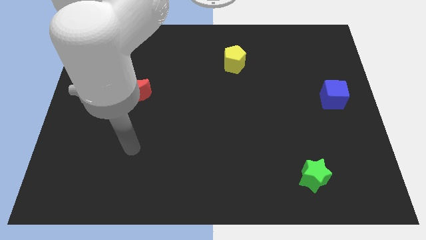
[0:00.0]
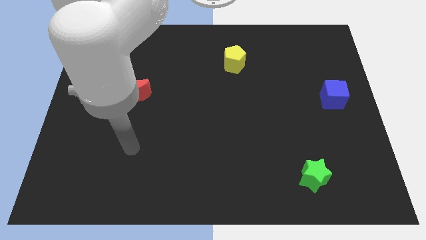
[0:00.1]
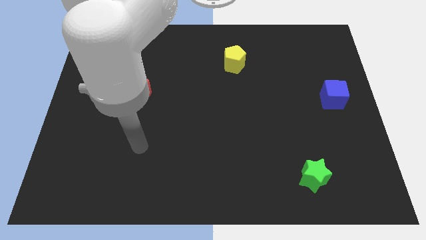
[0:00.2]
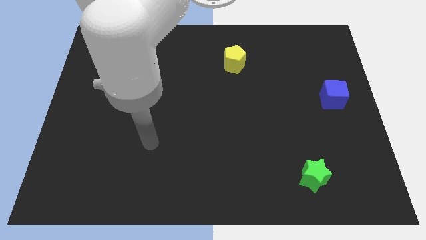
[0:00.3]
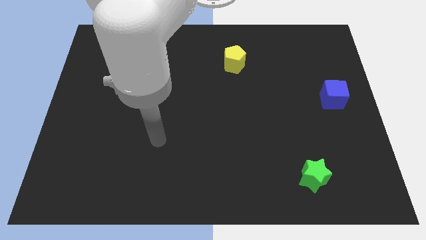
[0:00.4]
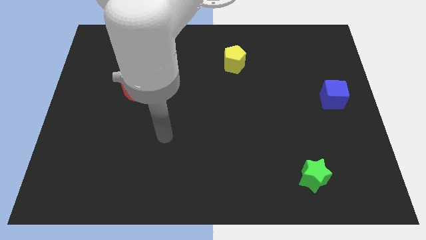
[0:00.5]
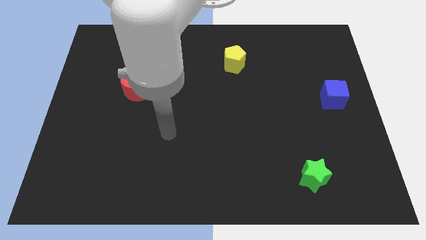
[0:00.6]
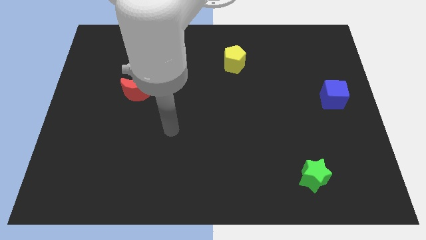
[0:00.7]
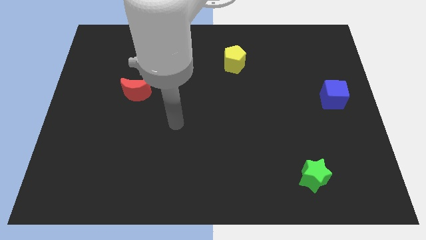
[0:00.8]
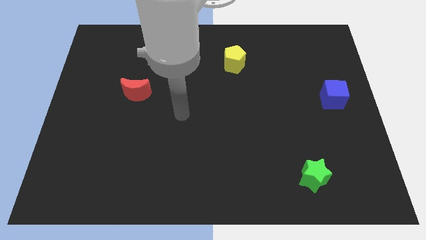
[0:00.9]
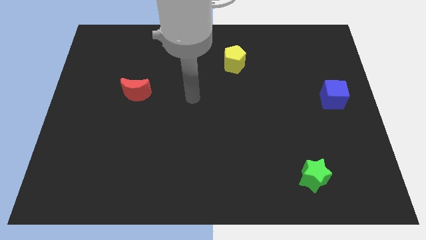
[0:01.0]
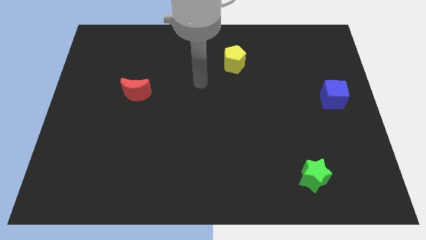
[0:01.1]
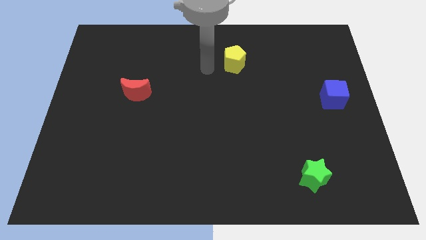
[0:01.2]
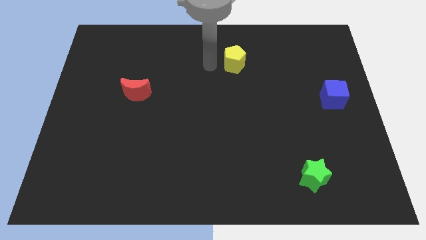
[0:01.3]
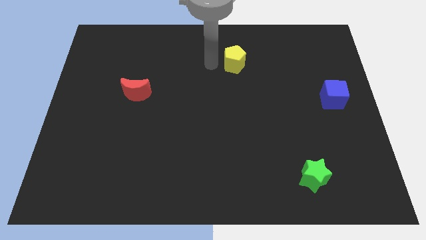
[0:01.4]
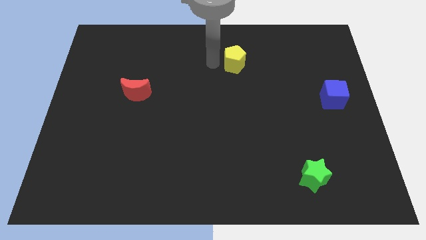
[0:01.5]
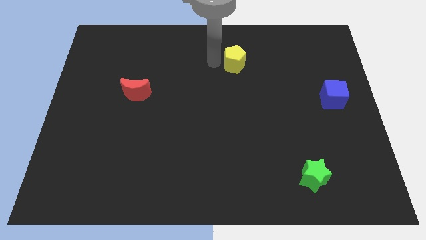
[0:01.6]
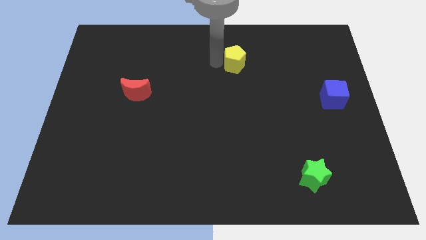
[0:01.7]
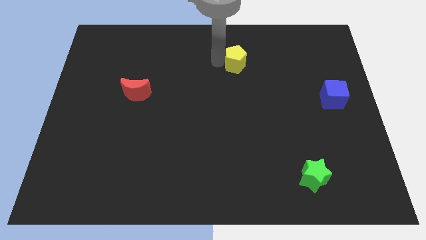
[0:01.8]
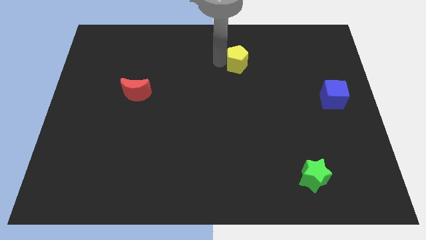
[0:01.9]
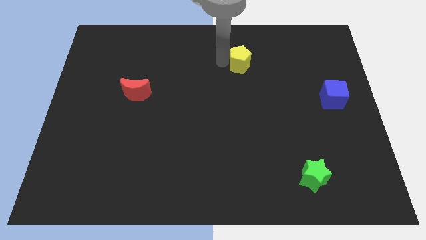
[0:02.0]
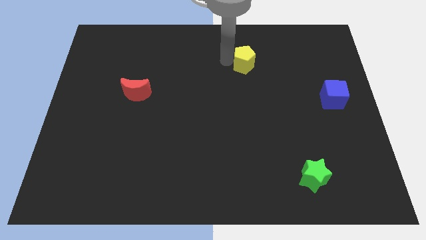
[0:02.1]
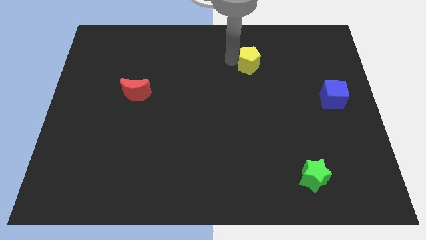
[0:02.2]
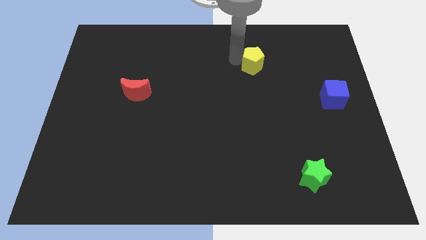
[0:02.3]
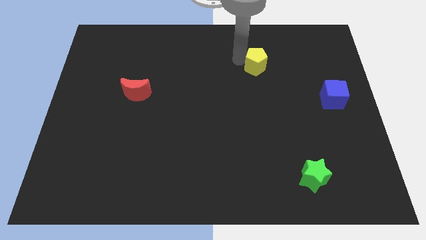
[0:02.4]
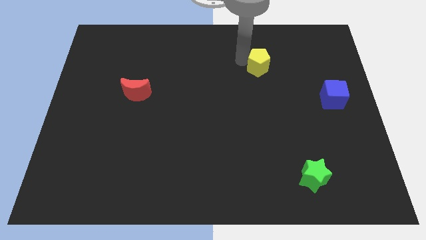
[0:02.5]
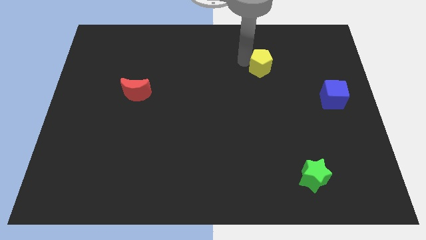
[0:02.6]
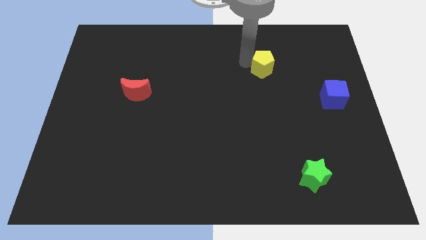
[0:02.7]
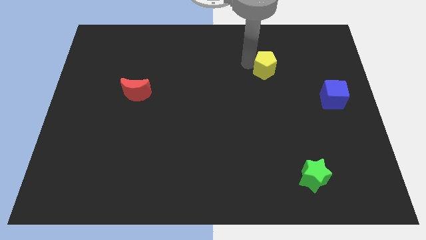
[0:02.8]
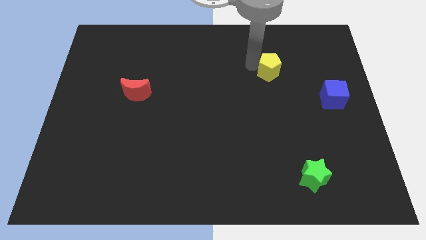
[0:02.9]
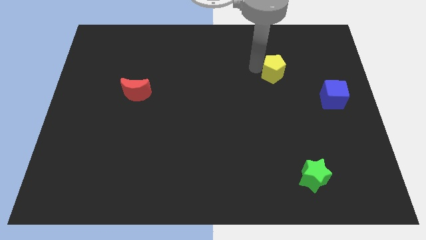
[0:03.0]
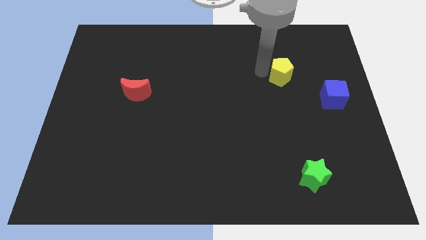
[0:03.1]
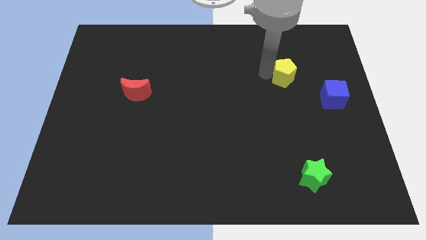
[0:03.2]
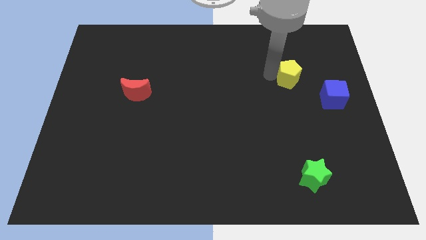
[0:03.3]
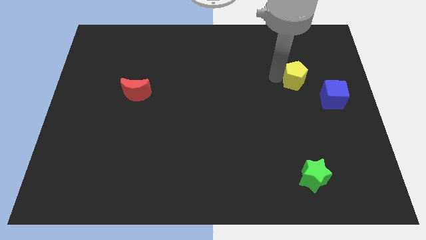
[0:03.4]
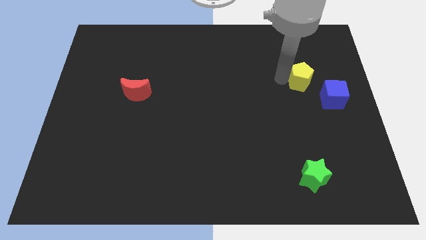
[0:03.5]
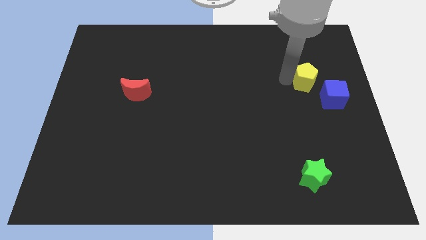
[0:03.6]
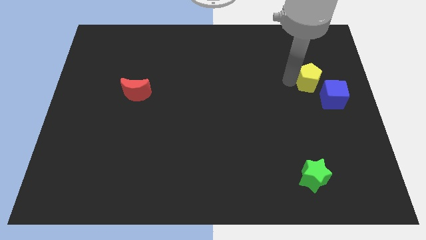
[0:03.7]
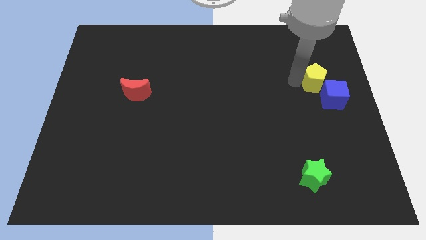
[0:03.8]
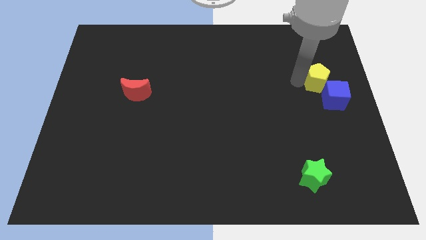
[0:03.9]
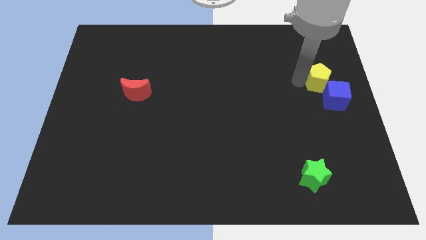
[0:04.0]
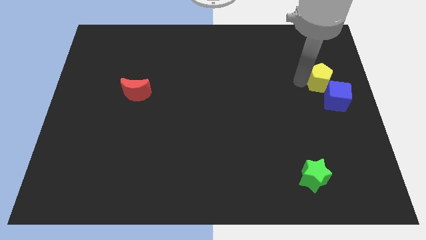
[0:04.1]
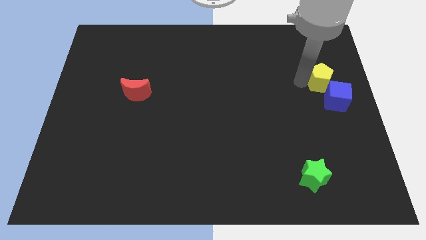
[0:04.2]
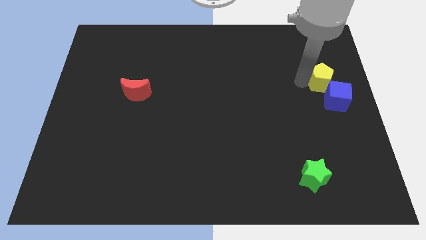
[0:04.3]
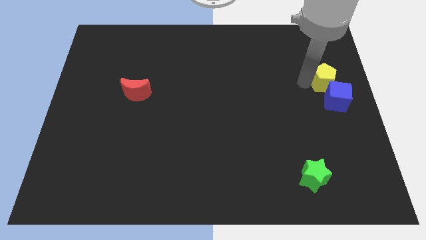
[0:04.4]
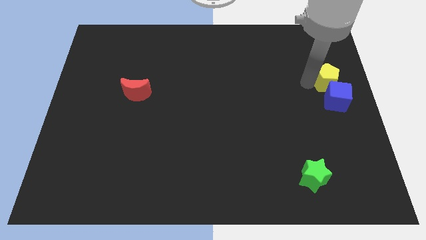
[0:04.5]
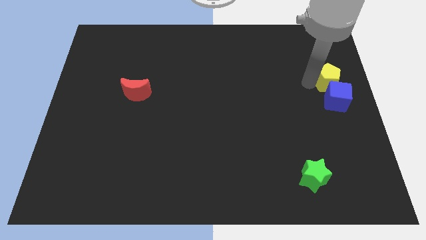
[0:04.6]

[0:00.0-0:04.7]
move the pentagon next to the cube

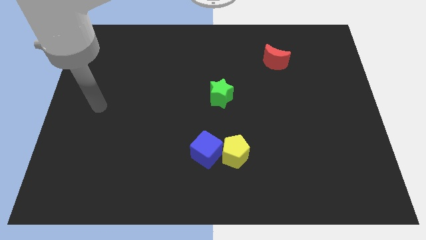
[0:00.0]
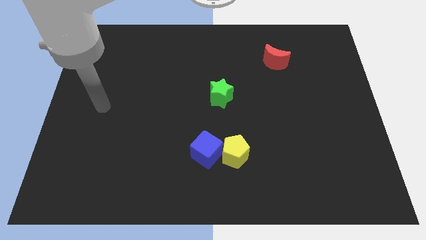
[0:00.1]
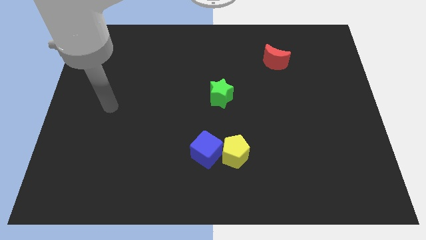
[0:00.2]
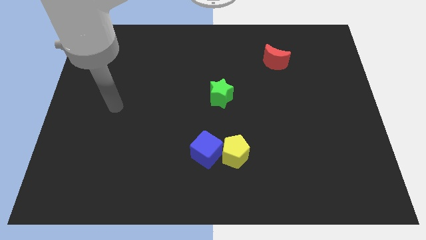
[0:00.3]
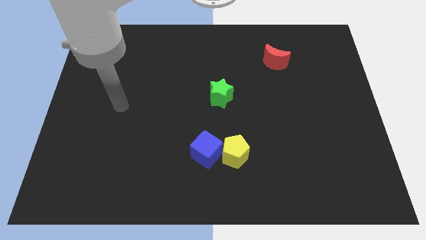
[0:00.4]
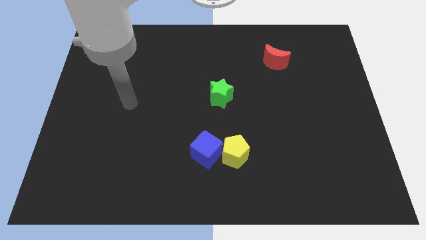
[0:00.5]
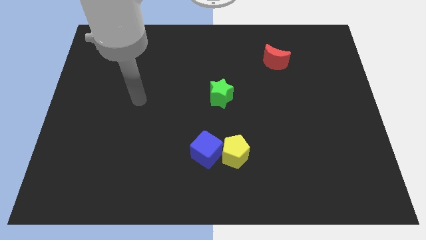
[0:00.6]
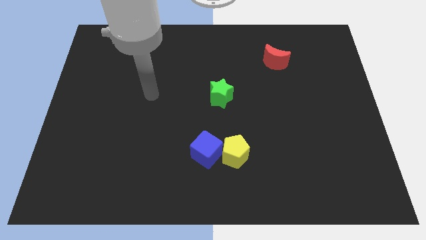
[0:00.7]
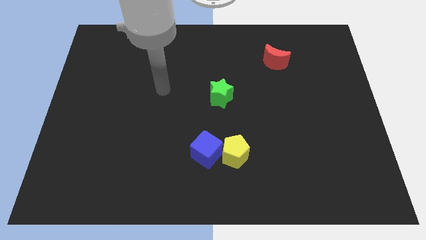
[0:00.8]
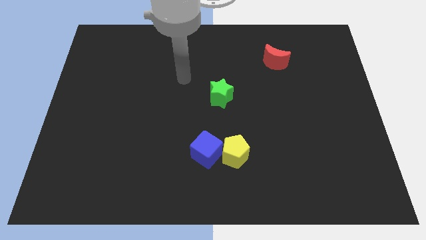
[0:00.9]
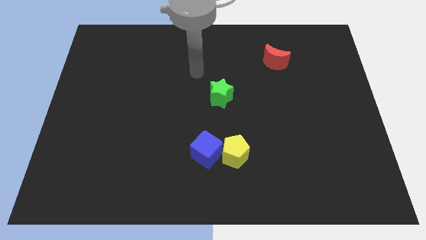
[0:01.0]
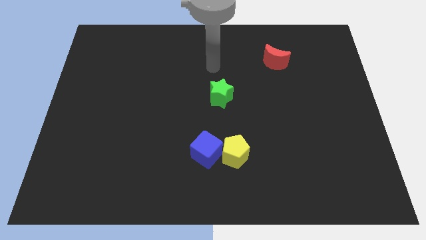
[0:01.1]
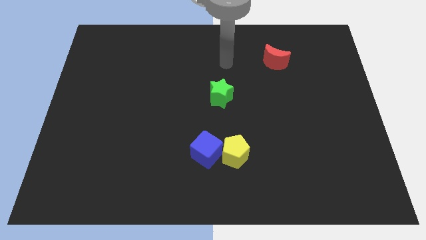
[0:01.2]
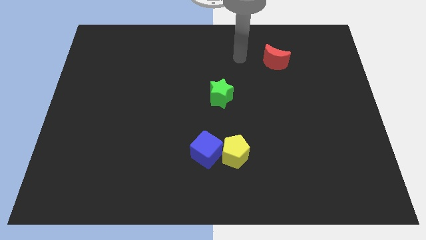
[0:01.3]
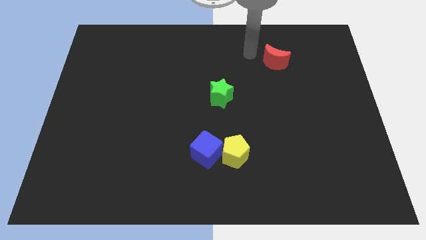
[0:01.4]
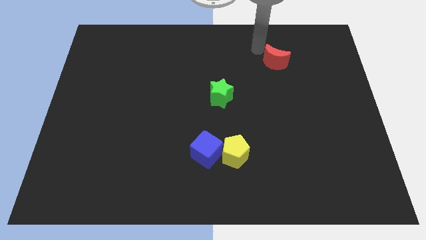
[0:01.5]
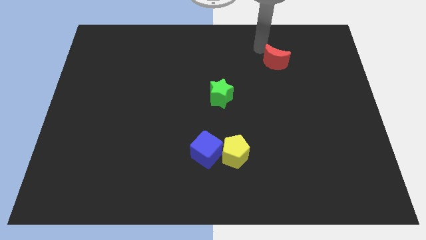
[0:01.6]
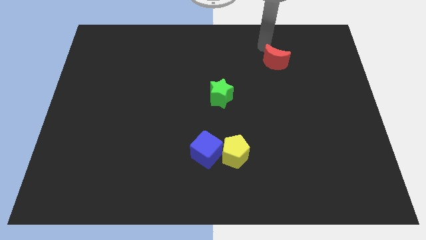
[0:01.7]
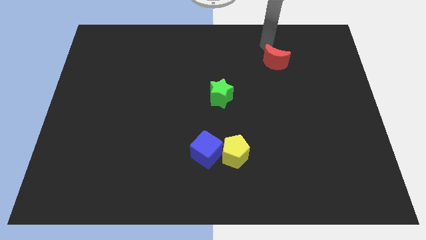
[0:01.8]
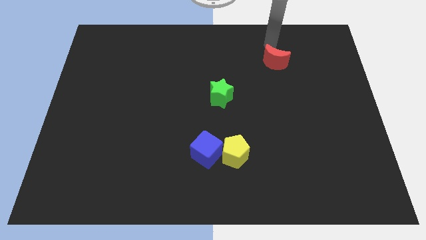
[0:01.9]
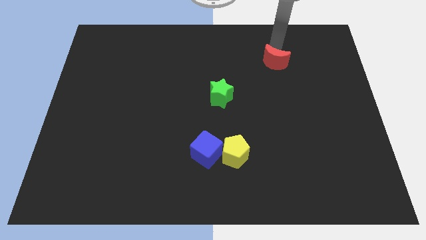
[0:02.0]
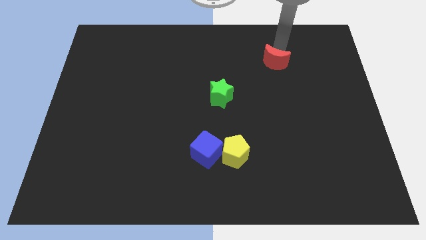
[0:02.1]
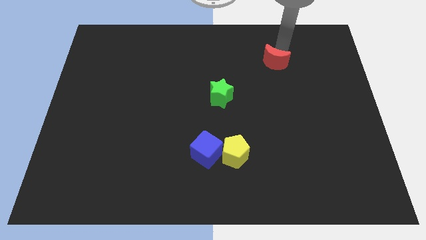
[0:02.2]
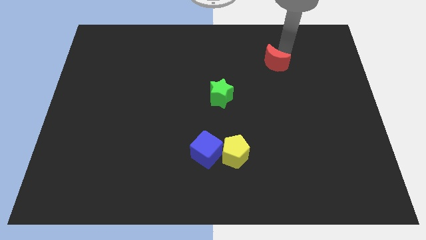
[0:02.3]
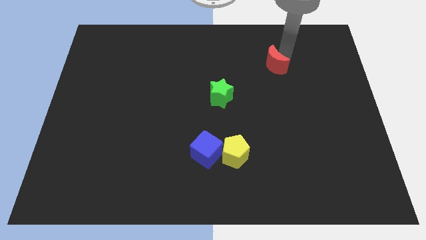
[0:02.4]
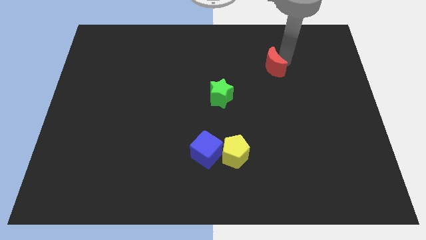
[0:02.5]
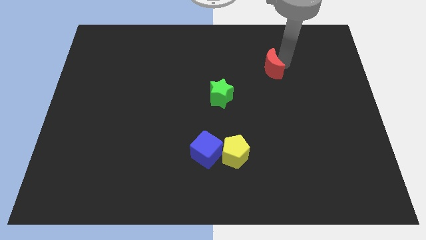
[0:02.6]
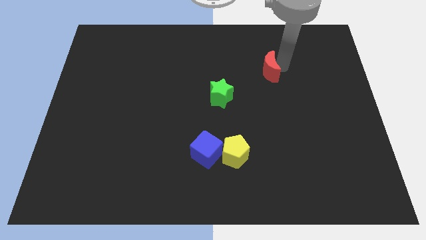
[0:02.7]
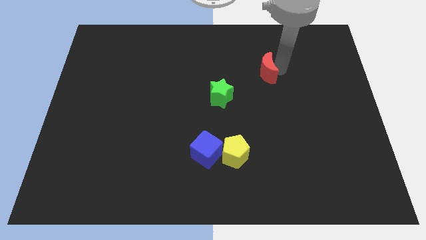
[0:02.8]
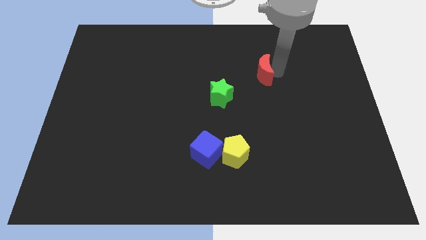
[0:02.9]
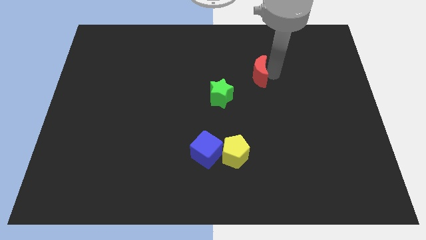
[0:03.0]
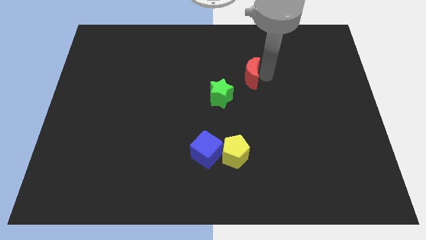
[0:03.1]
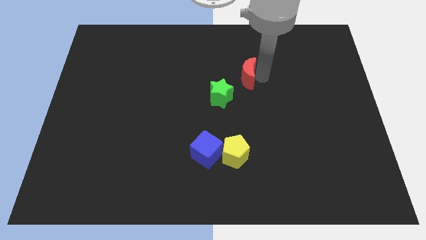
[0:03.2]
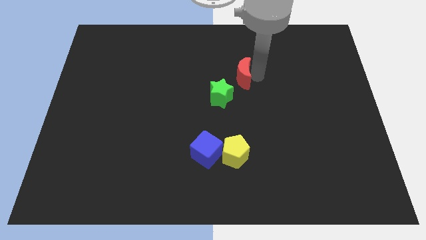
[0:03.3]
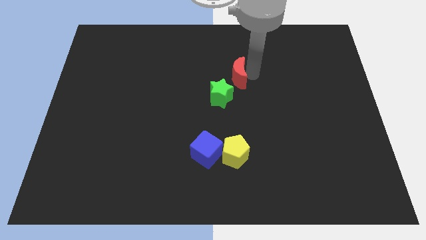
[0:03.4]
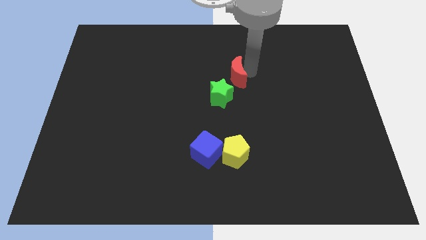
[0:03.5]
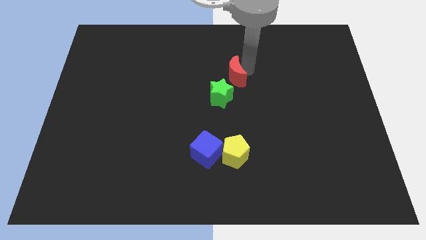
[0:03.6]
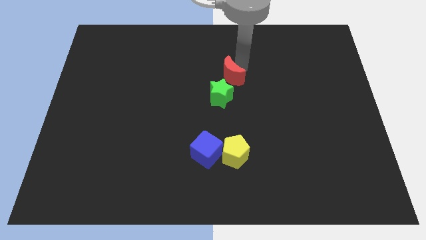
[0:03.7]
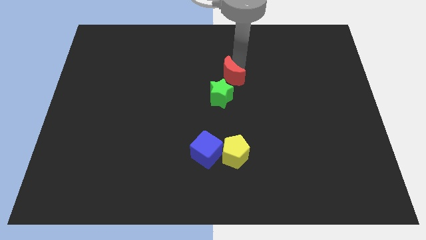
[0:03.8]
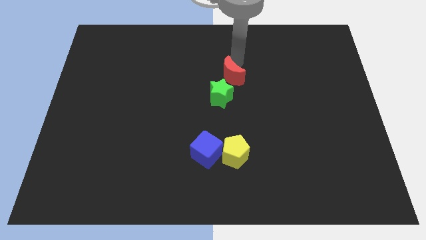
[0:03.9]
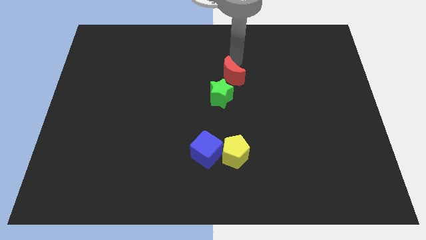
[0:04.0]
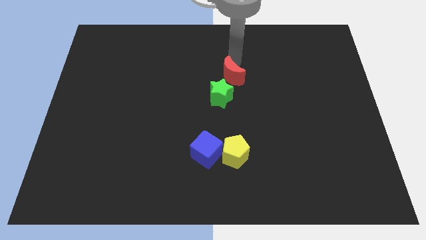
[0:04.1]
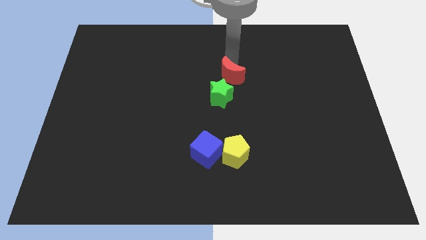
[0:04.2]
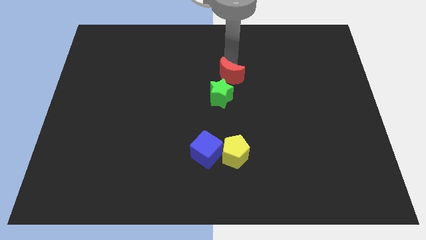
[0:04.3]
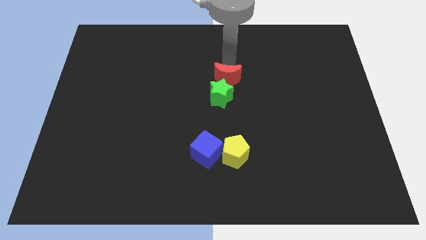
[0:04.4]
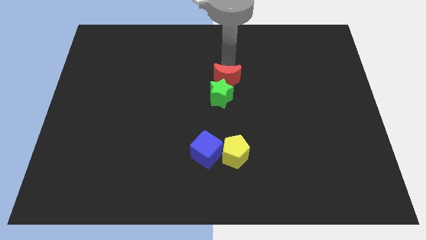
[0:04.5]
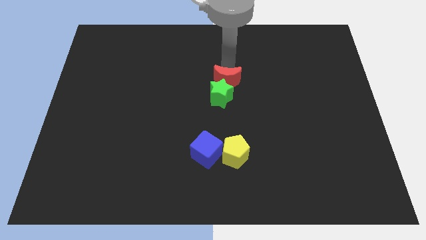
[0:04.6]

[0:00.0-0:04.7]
put the red block to the star
